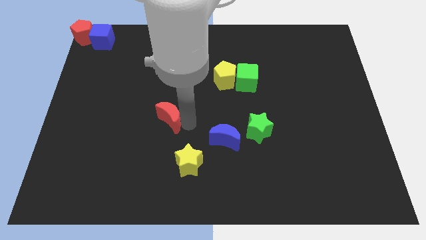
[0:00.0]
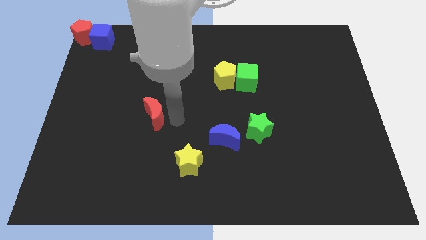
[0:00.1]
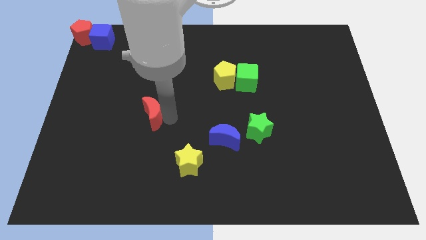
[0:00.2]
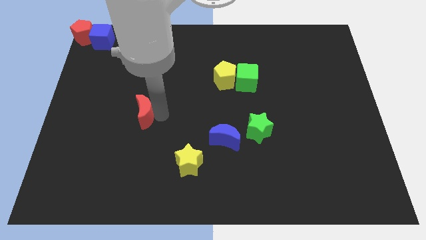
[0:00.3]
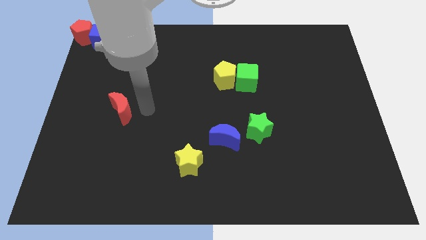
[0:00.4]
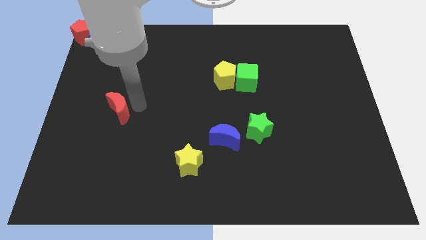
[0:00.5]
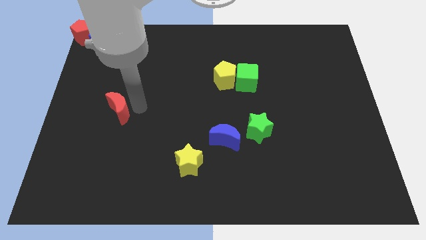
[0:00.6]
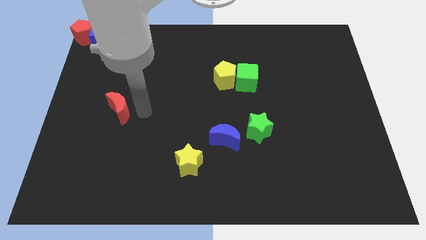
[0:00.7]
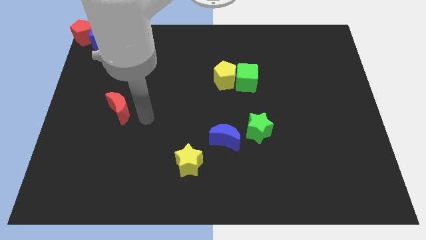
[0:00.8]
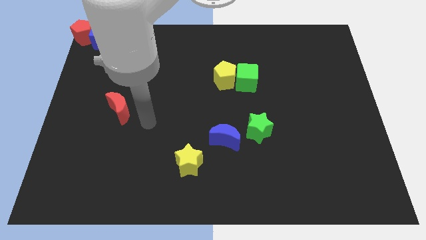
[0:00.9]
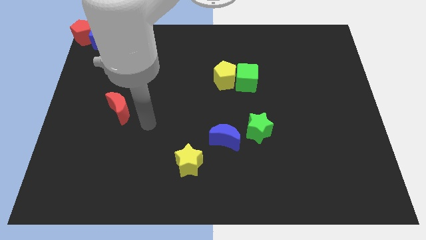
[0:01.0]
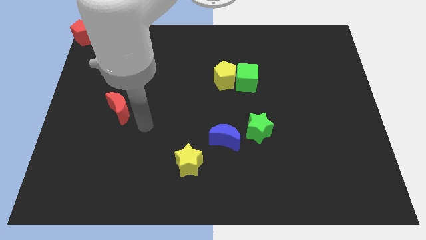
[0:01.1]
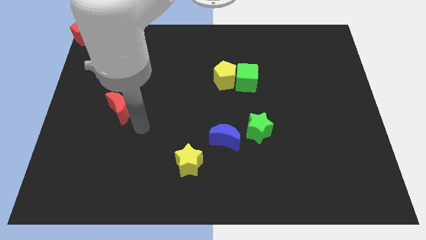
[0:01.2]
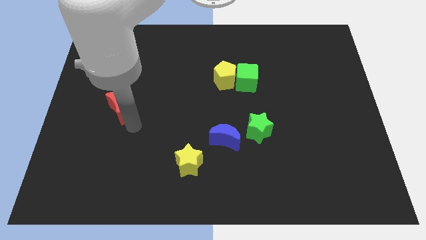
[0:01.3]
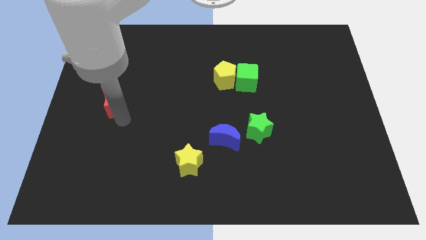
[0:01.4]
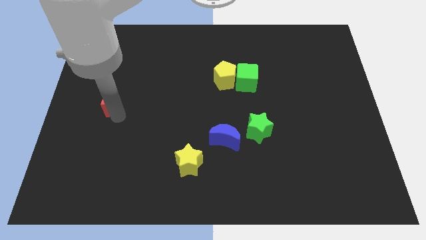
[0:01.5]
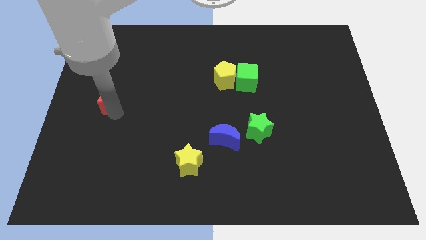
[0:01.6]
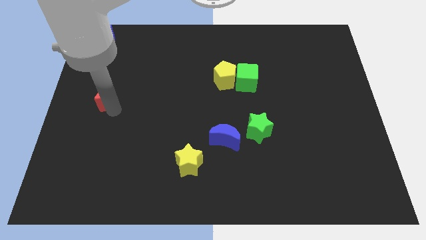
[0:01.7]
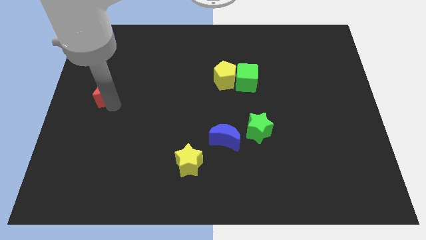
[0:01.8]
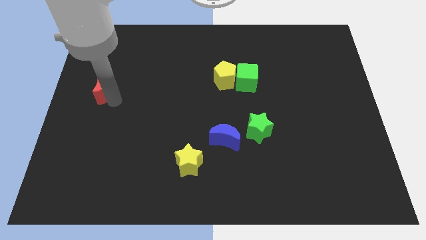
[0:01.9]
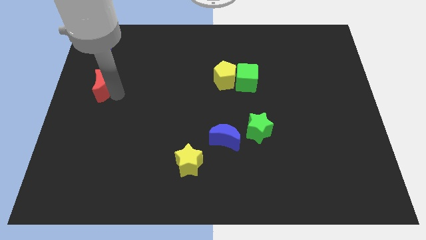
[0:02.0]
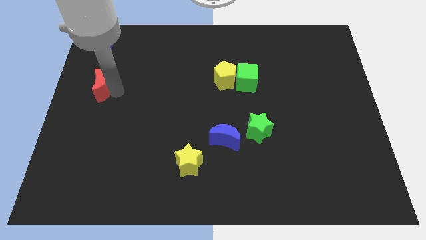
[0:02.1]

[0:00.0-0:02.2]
place the red moon below the blue cube

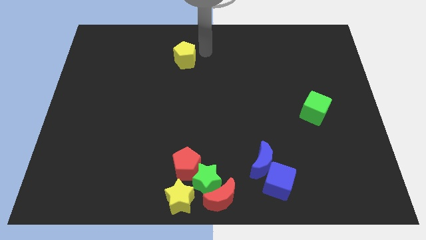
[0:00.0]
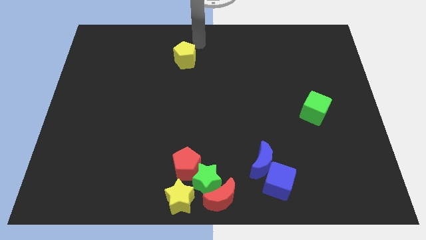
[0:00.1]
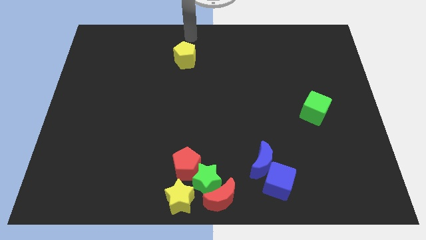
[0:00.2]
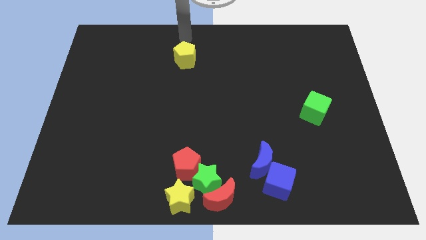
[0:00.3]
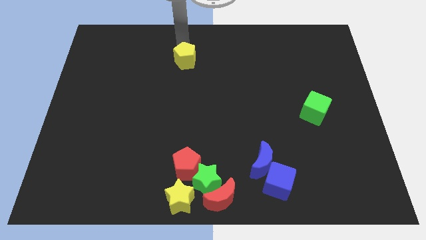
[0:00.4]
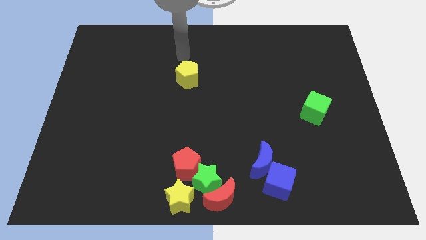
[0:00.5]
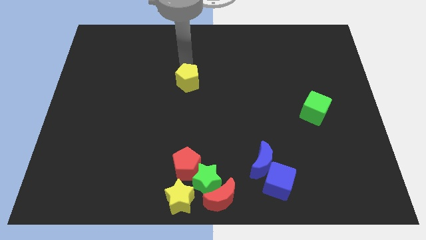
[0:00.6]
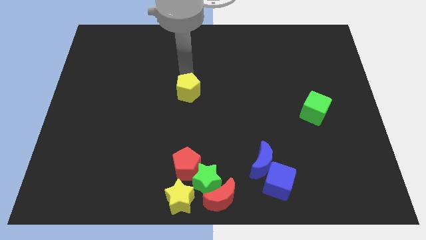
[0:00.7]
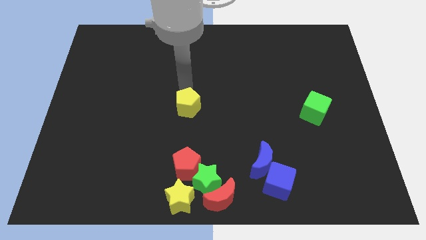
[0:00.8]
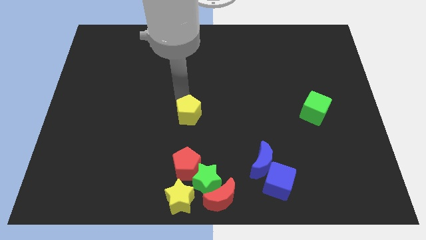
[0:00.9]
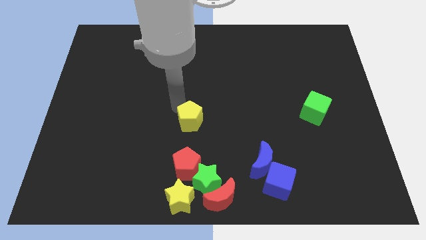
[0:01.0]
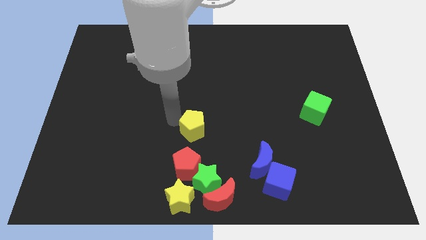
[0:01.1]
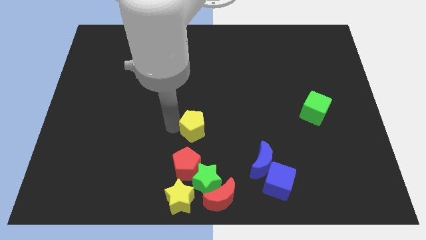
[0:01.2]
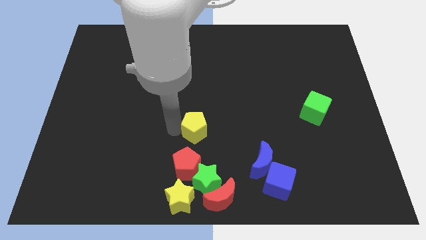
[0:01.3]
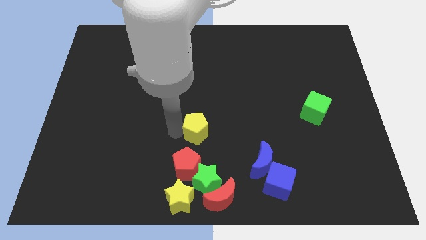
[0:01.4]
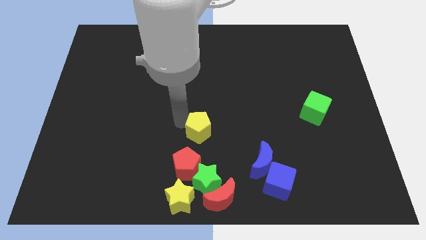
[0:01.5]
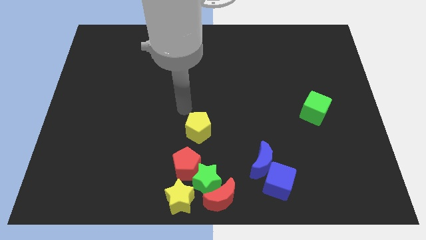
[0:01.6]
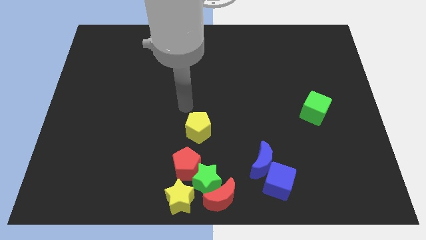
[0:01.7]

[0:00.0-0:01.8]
push the yellow pentagon close to the top of red pentagon

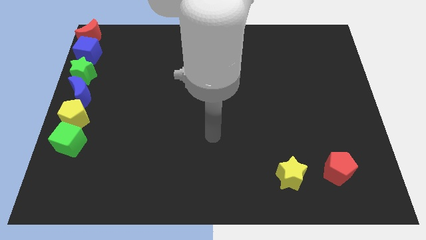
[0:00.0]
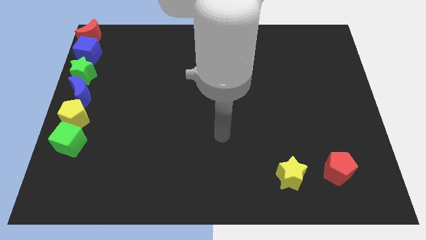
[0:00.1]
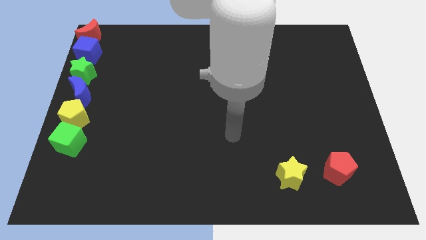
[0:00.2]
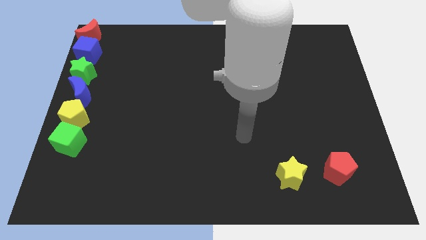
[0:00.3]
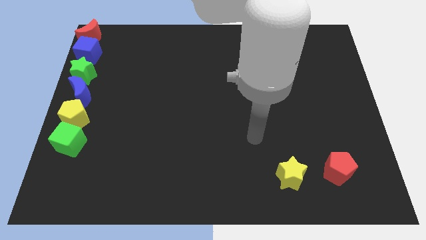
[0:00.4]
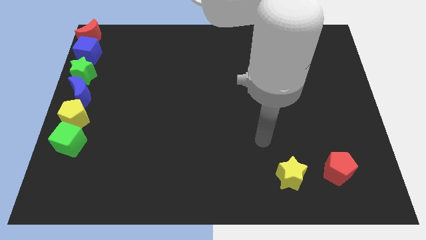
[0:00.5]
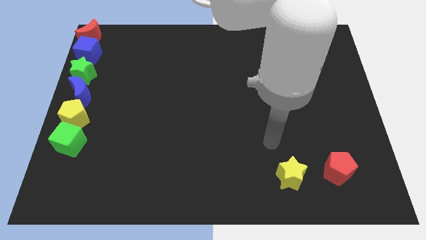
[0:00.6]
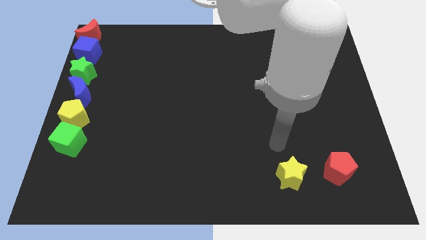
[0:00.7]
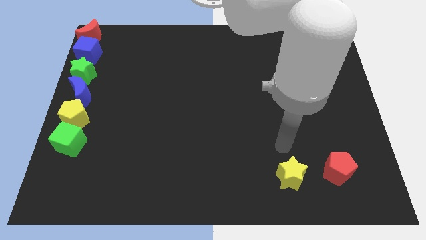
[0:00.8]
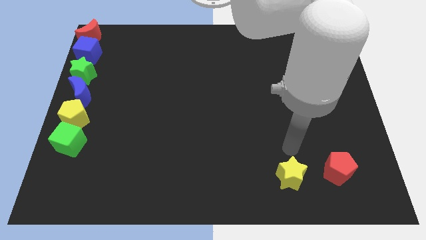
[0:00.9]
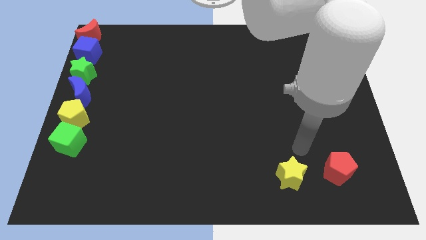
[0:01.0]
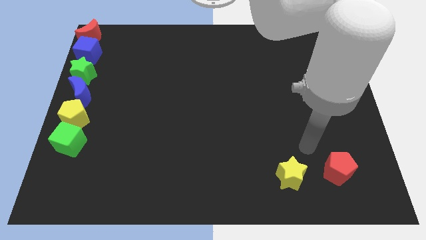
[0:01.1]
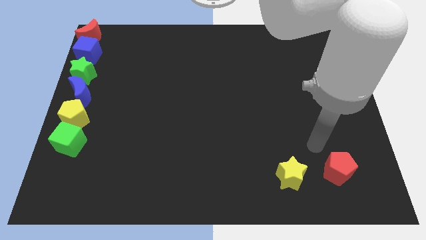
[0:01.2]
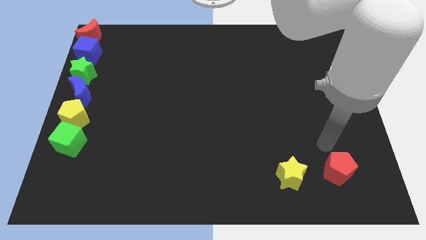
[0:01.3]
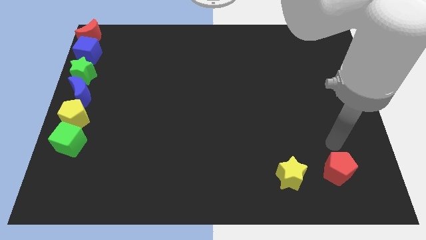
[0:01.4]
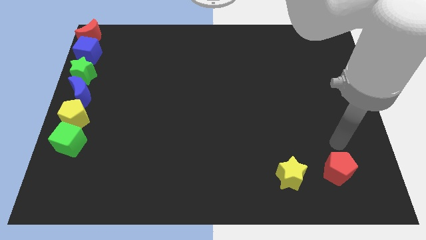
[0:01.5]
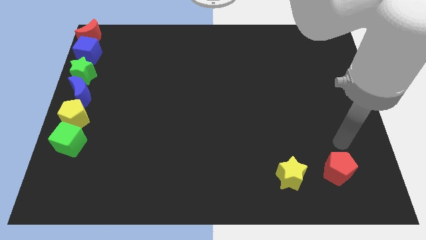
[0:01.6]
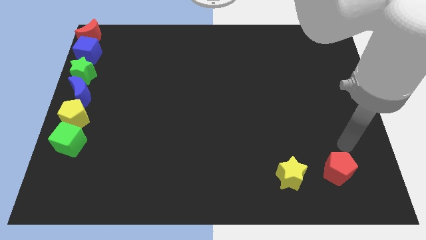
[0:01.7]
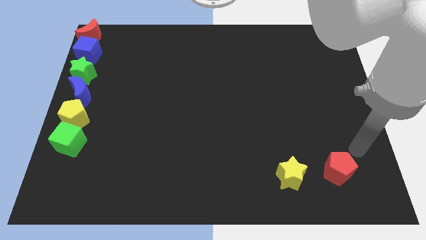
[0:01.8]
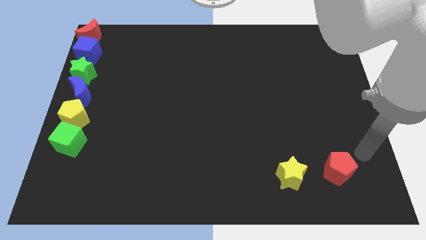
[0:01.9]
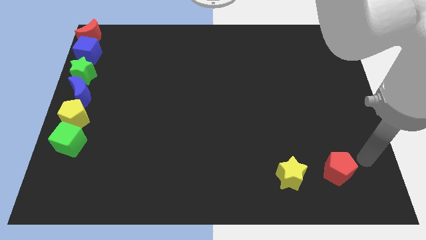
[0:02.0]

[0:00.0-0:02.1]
move your arm towards the bottom right of the board

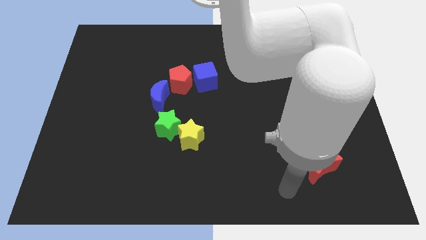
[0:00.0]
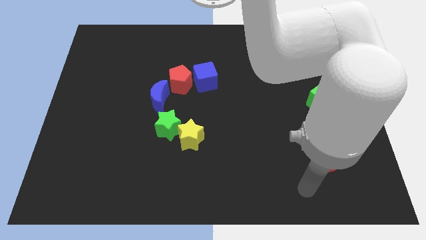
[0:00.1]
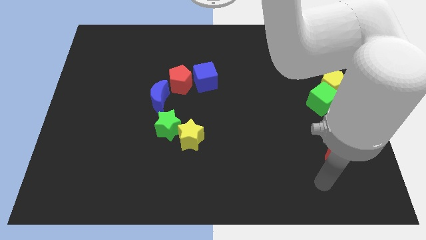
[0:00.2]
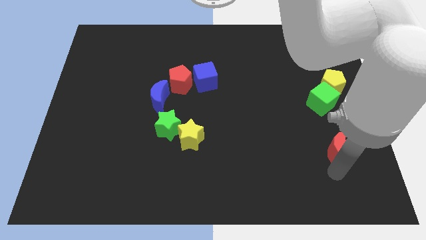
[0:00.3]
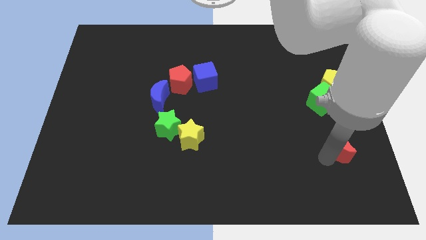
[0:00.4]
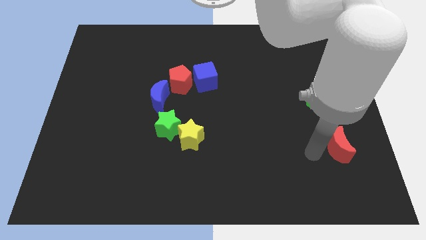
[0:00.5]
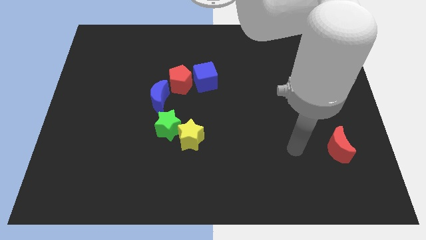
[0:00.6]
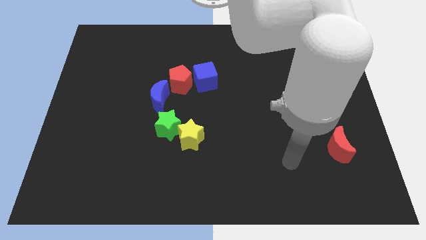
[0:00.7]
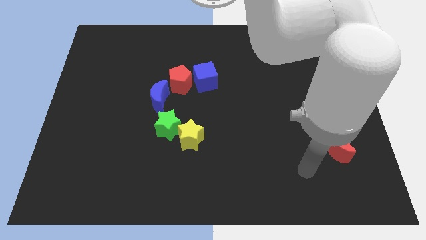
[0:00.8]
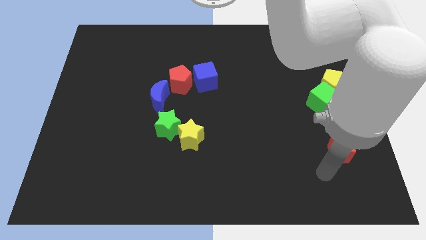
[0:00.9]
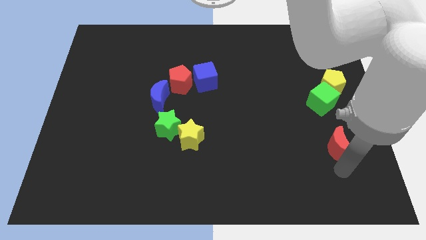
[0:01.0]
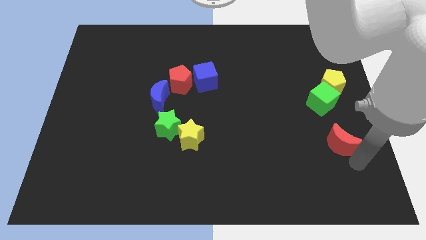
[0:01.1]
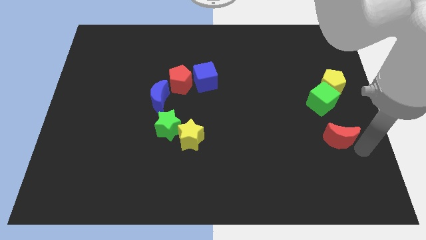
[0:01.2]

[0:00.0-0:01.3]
move the red crescent towards the green cube

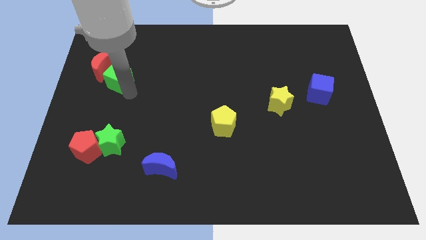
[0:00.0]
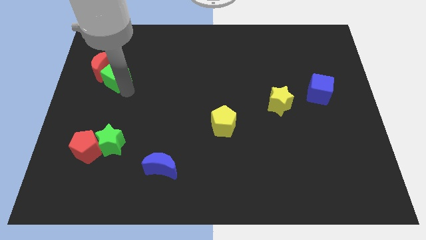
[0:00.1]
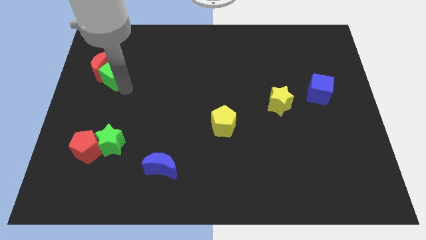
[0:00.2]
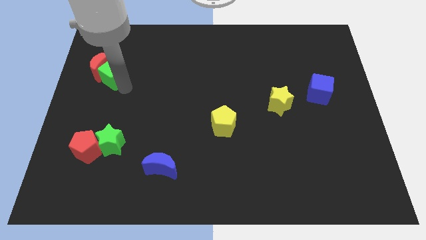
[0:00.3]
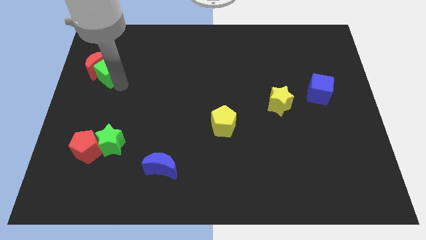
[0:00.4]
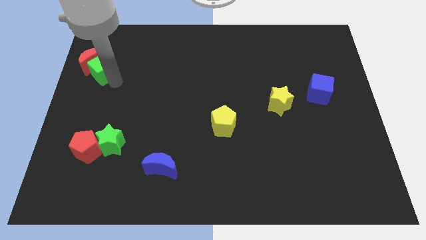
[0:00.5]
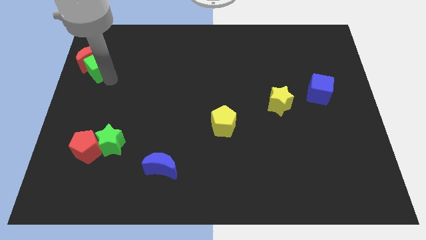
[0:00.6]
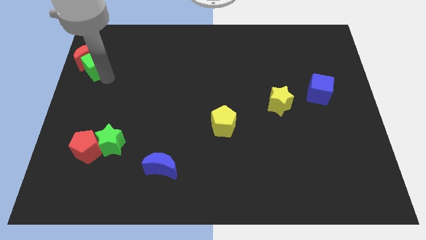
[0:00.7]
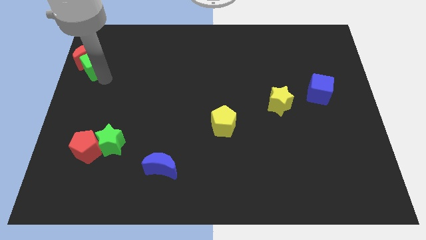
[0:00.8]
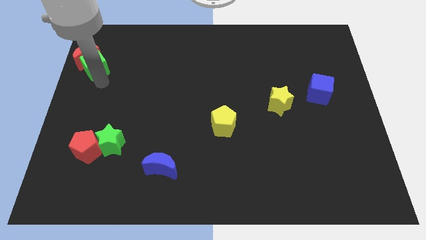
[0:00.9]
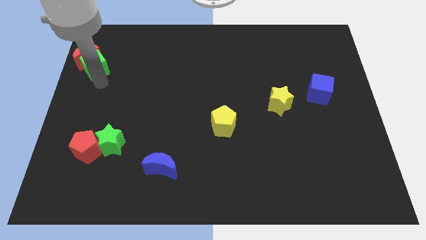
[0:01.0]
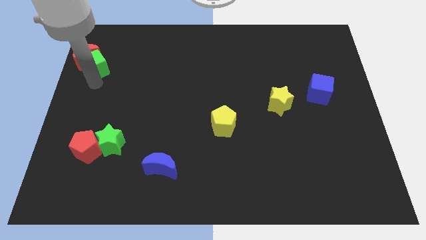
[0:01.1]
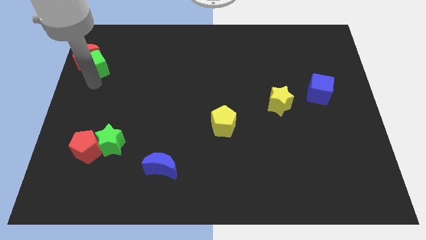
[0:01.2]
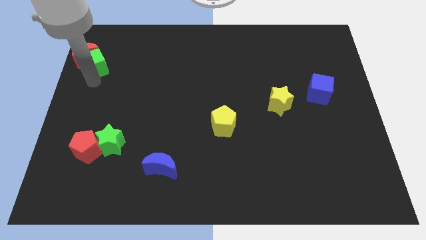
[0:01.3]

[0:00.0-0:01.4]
push green cube into the red moon
